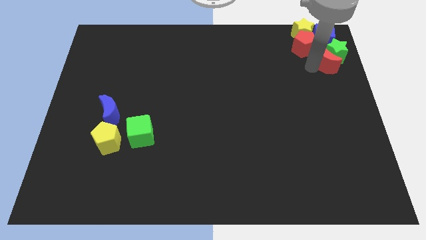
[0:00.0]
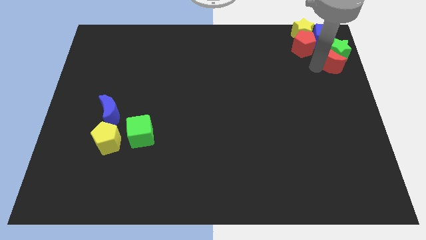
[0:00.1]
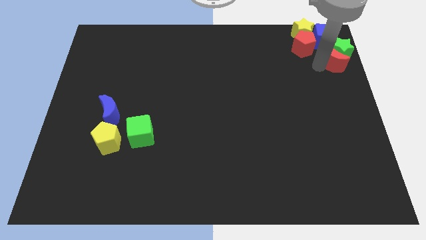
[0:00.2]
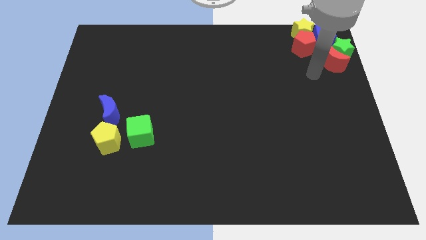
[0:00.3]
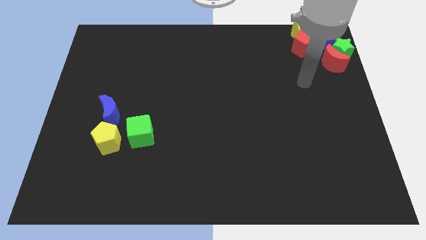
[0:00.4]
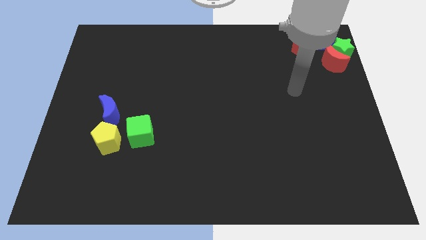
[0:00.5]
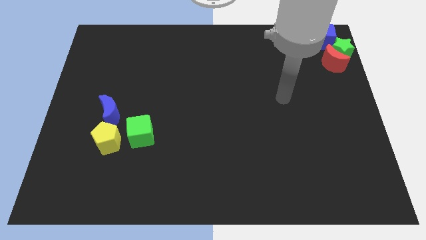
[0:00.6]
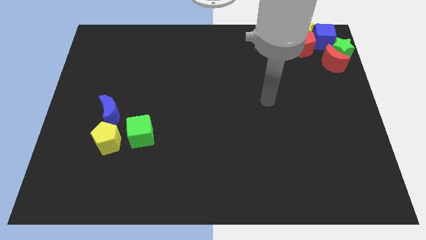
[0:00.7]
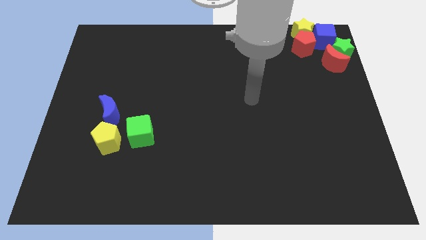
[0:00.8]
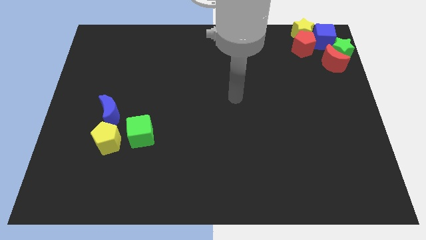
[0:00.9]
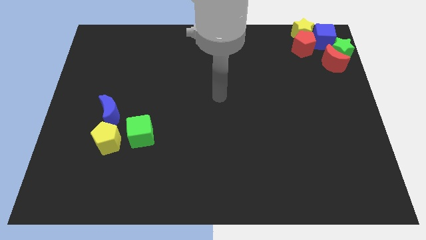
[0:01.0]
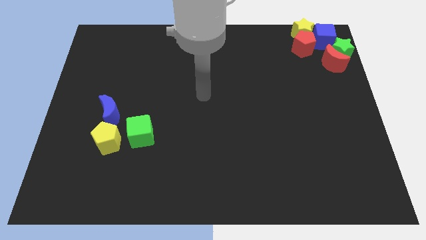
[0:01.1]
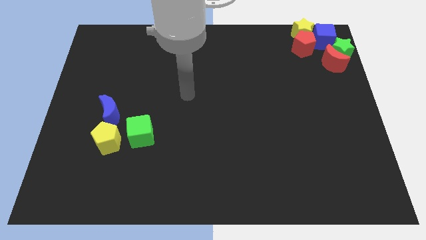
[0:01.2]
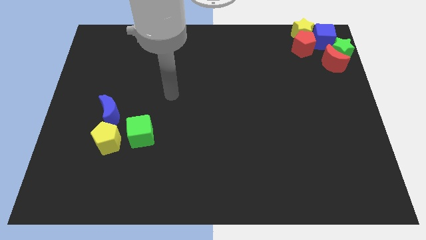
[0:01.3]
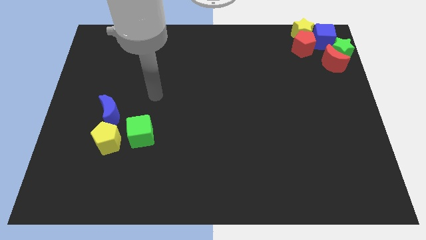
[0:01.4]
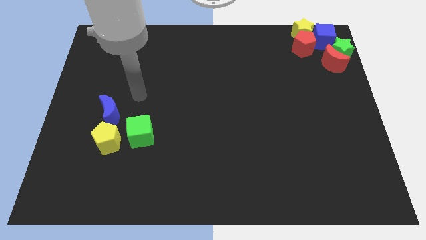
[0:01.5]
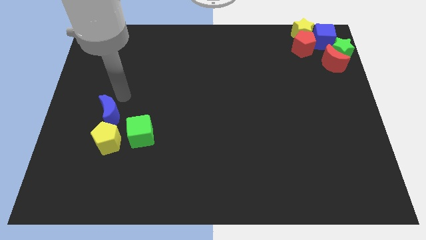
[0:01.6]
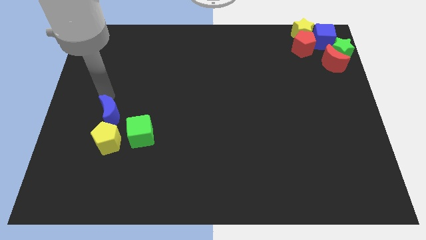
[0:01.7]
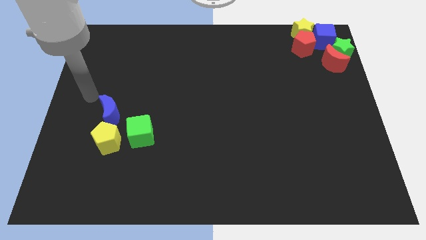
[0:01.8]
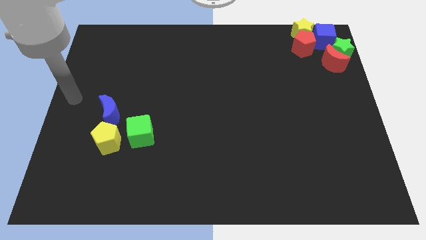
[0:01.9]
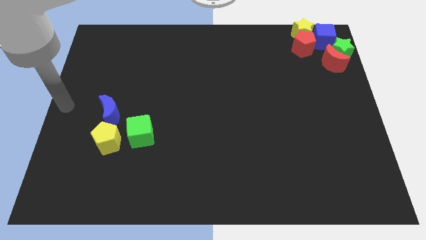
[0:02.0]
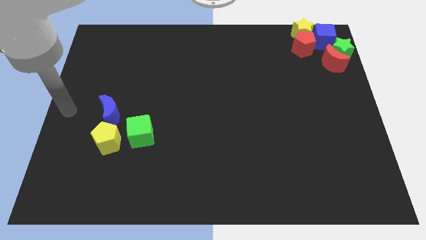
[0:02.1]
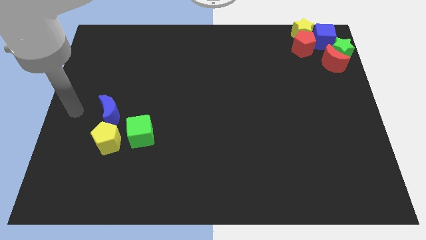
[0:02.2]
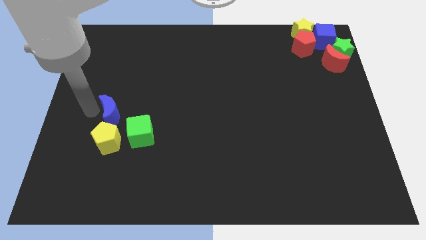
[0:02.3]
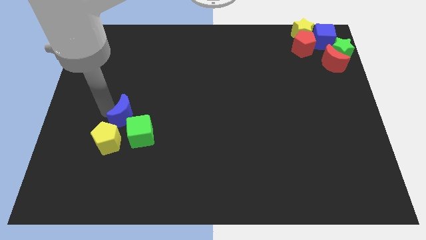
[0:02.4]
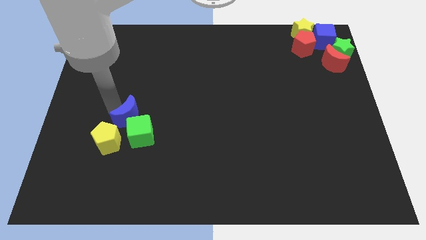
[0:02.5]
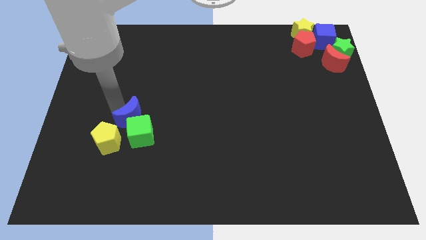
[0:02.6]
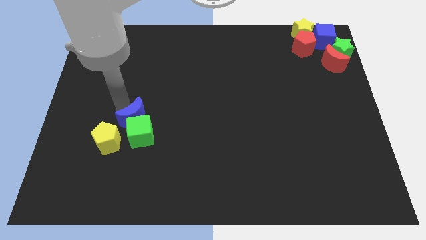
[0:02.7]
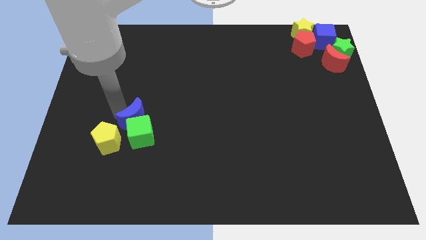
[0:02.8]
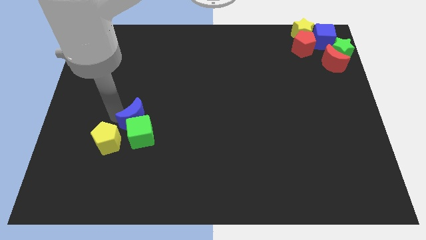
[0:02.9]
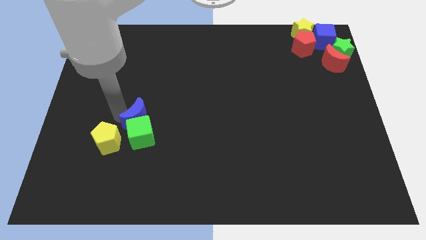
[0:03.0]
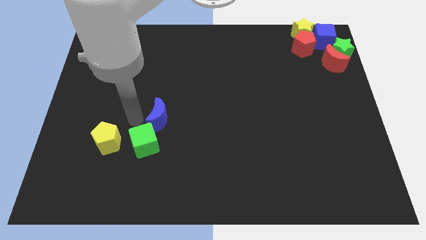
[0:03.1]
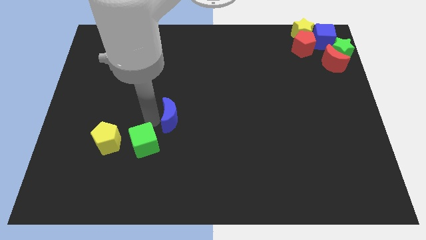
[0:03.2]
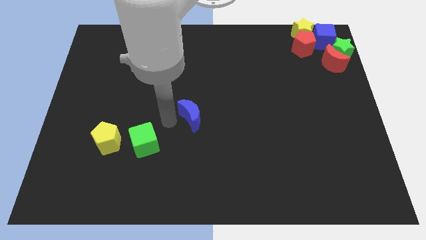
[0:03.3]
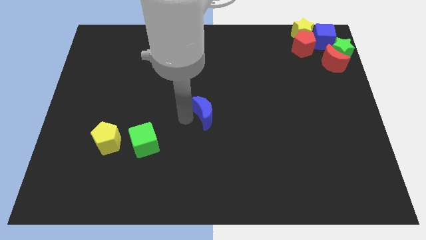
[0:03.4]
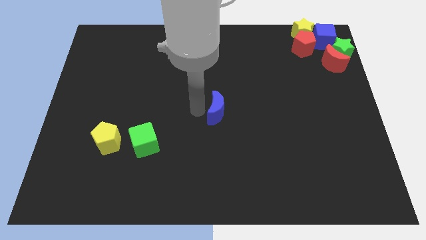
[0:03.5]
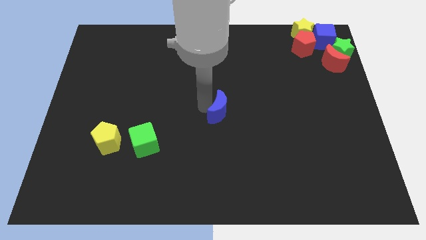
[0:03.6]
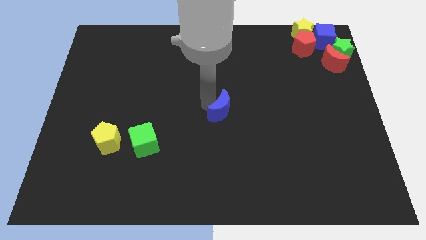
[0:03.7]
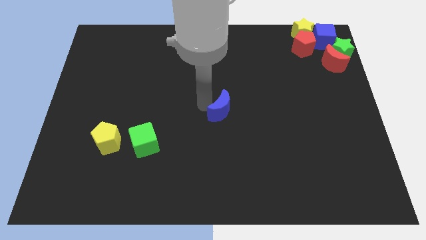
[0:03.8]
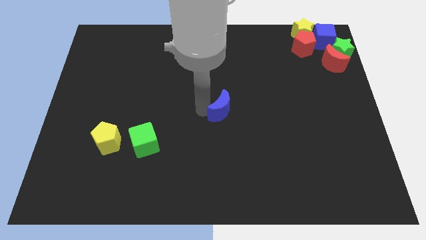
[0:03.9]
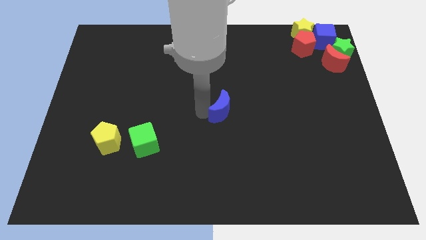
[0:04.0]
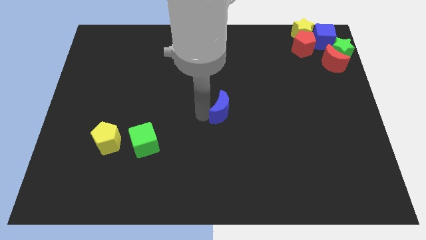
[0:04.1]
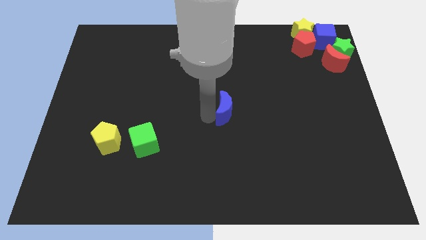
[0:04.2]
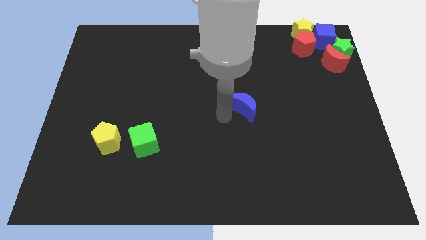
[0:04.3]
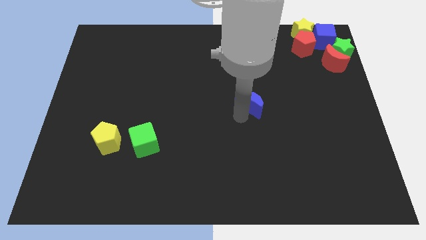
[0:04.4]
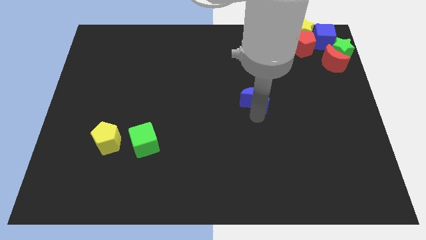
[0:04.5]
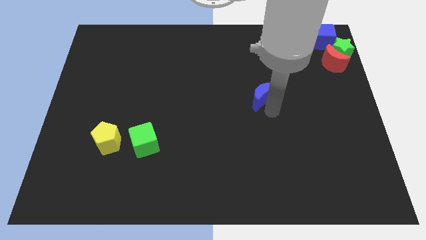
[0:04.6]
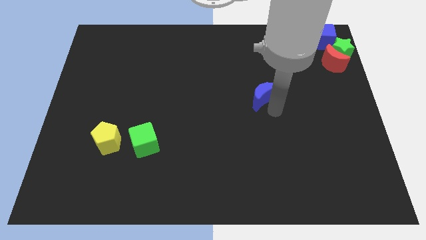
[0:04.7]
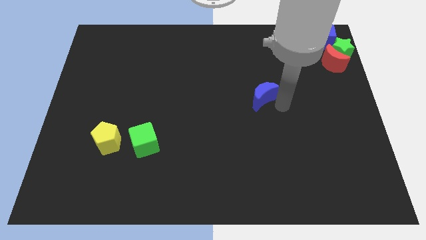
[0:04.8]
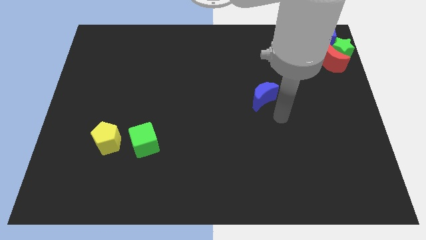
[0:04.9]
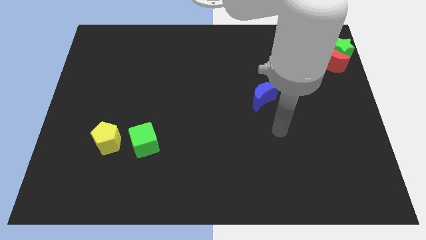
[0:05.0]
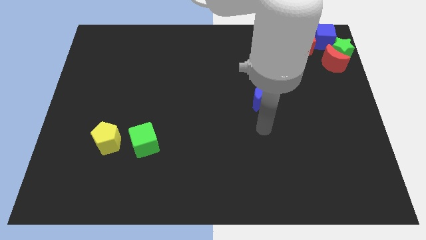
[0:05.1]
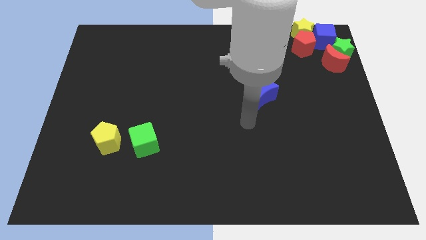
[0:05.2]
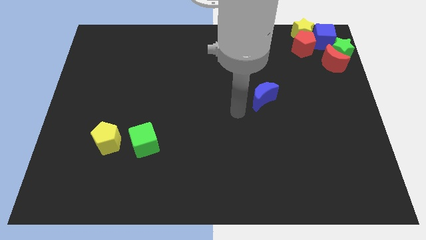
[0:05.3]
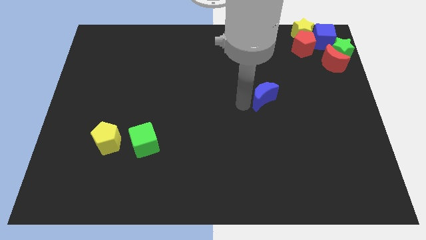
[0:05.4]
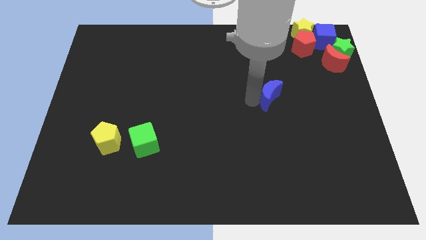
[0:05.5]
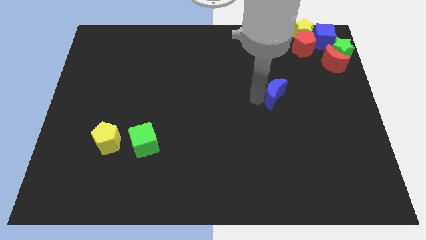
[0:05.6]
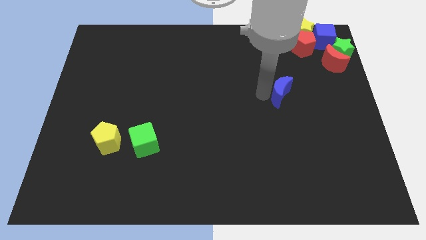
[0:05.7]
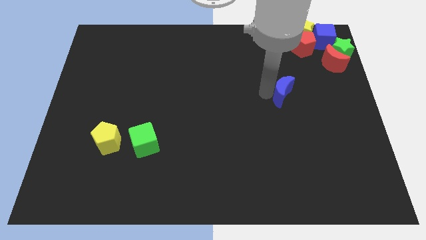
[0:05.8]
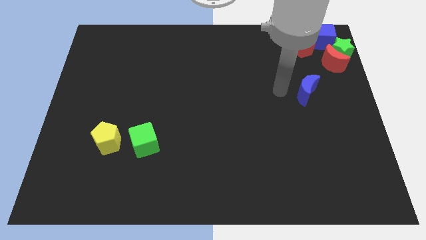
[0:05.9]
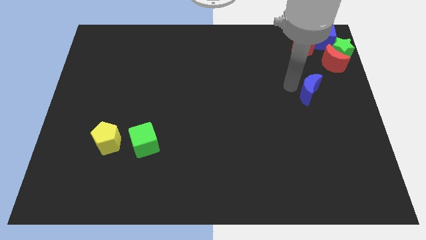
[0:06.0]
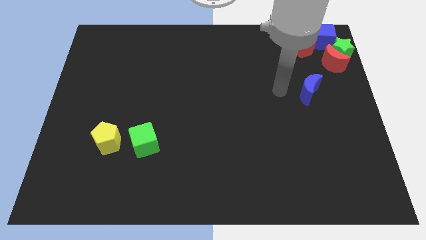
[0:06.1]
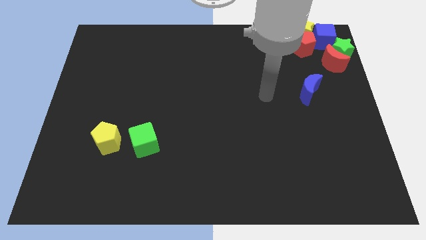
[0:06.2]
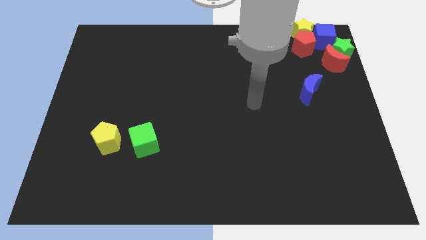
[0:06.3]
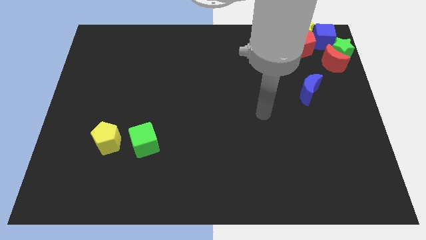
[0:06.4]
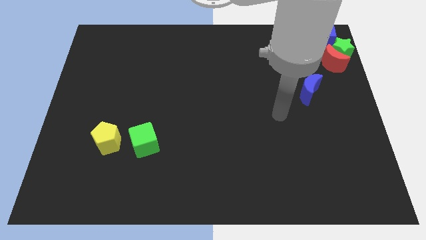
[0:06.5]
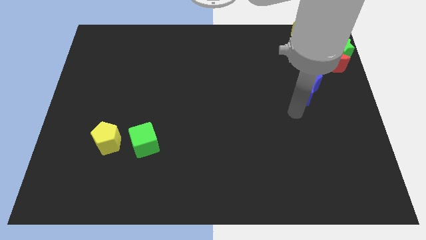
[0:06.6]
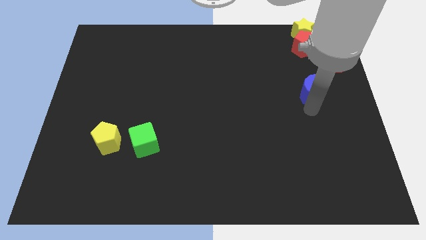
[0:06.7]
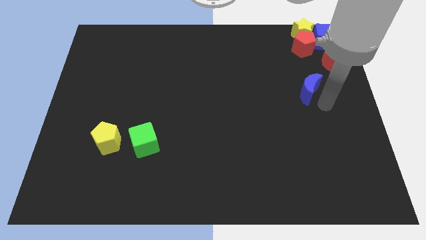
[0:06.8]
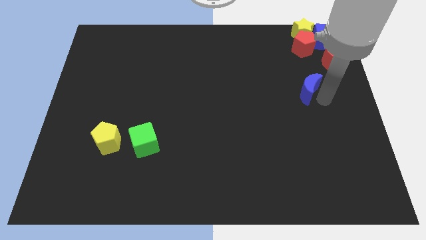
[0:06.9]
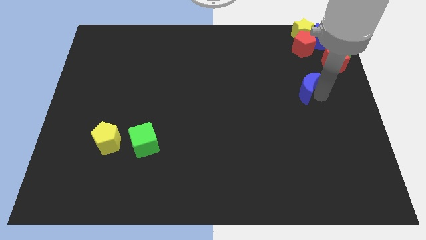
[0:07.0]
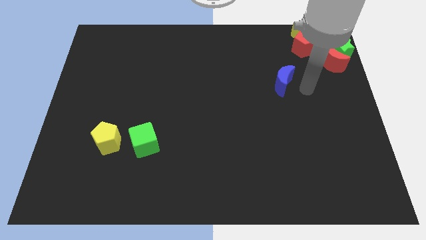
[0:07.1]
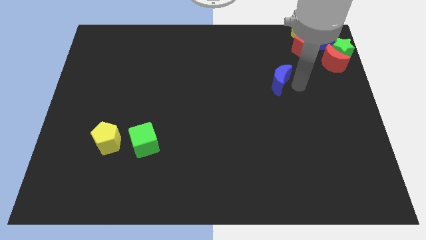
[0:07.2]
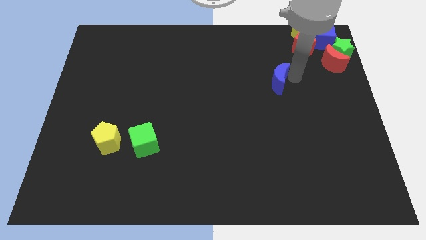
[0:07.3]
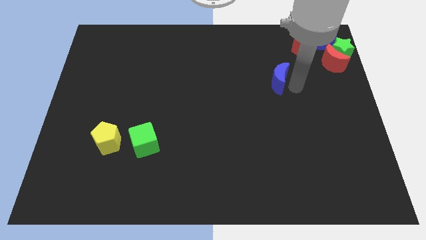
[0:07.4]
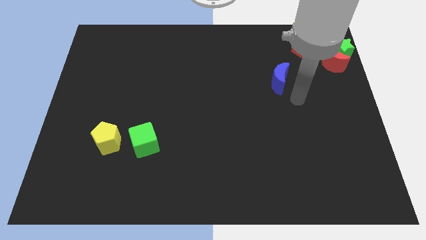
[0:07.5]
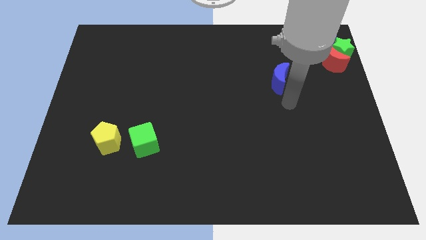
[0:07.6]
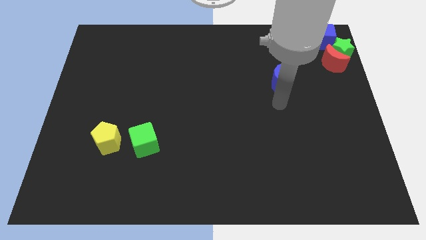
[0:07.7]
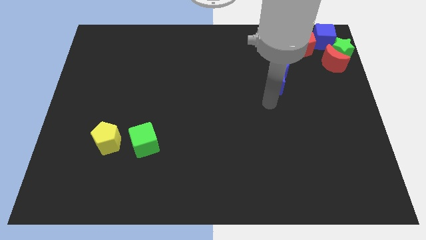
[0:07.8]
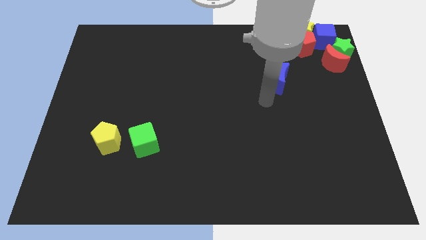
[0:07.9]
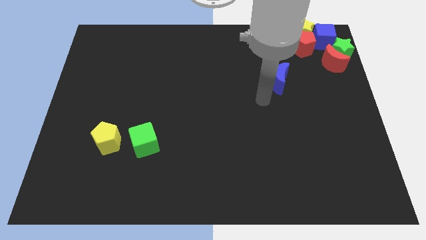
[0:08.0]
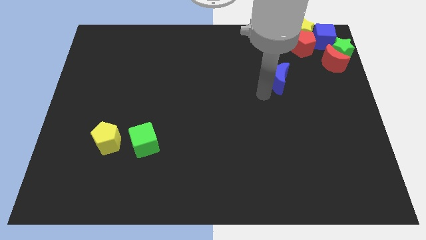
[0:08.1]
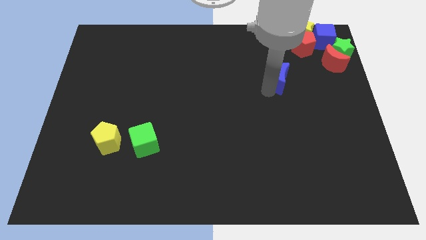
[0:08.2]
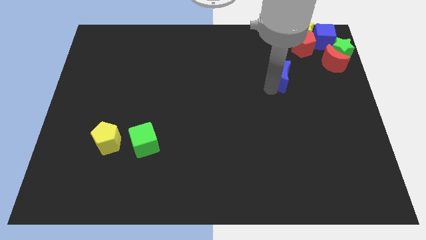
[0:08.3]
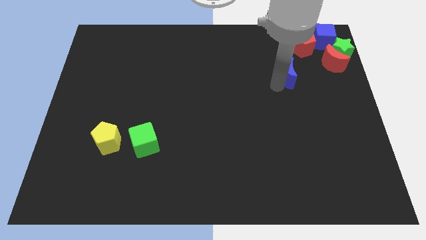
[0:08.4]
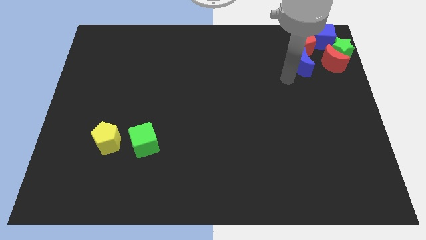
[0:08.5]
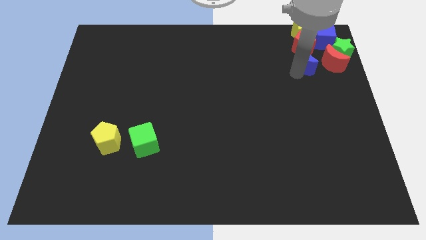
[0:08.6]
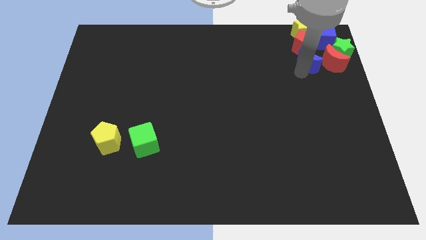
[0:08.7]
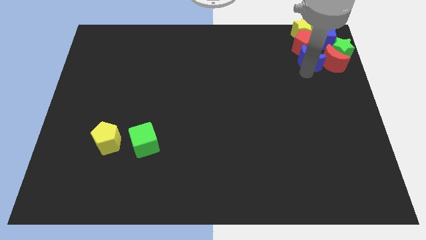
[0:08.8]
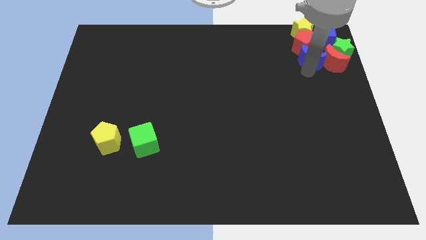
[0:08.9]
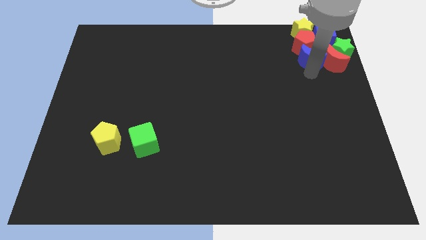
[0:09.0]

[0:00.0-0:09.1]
push the blue moon into the red block at the top right of the board
